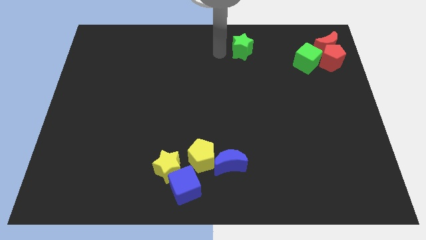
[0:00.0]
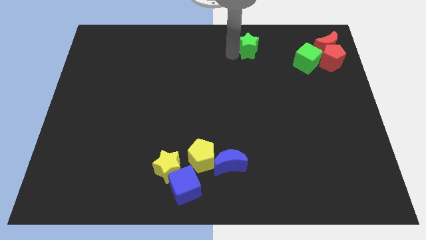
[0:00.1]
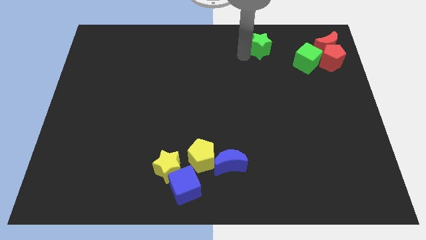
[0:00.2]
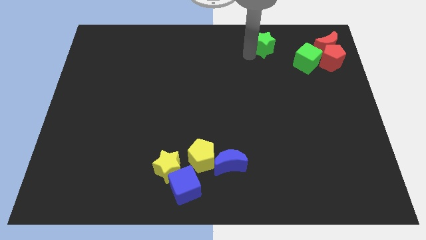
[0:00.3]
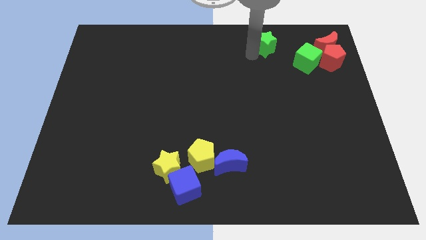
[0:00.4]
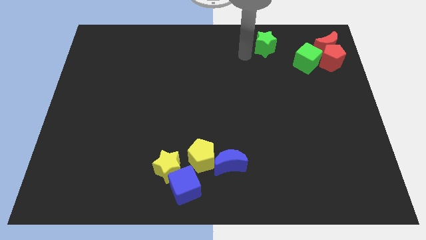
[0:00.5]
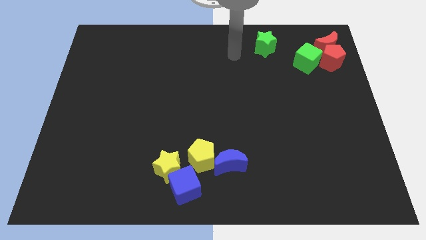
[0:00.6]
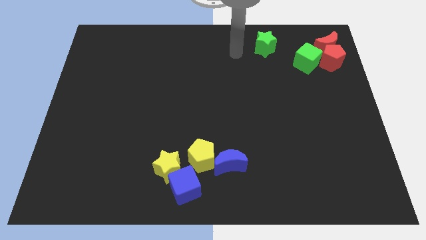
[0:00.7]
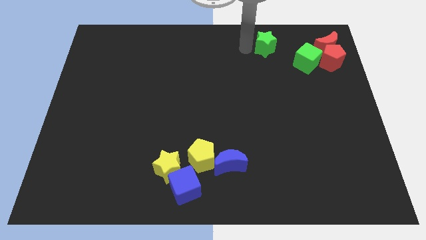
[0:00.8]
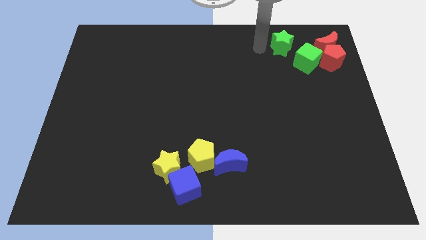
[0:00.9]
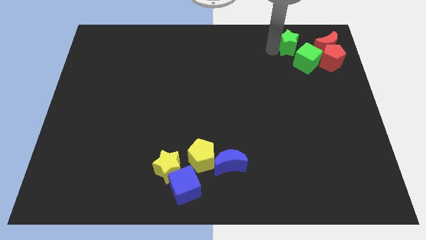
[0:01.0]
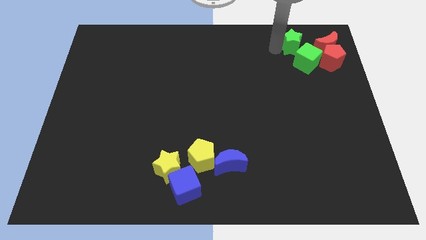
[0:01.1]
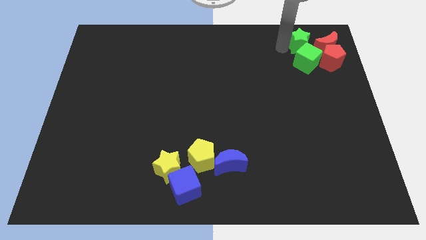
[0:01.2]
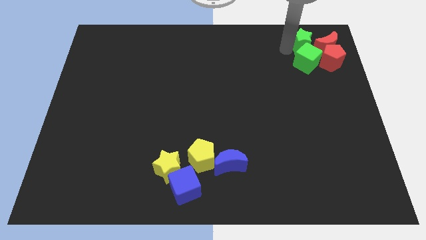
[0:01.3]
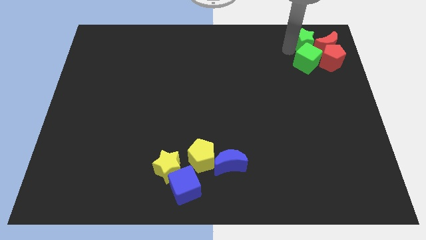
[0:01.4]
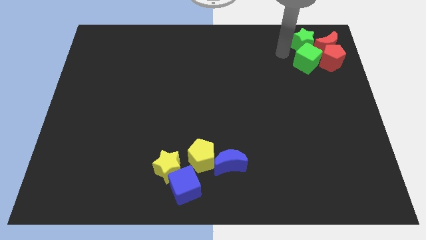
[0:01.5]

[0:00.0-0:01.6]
place the green star vertically above the green cube

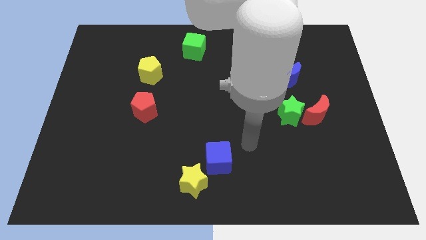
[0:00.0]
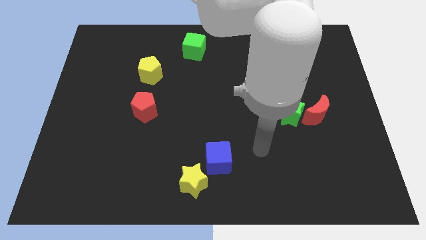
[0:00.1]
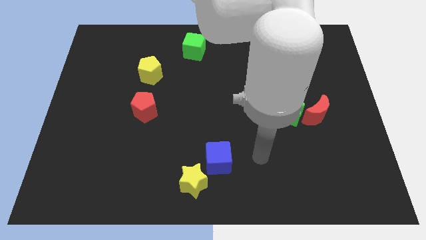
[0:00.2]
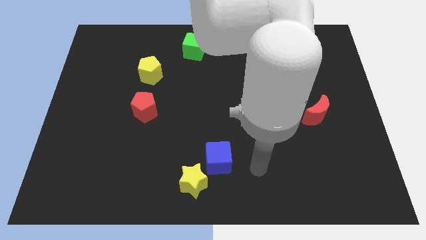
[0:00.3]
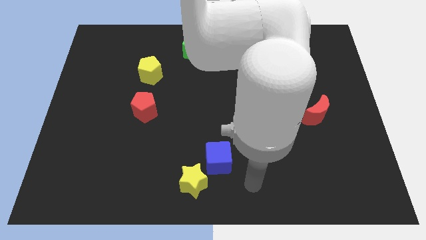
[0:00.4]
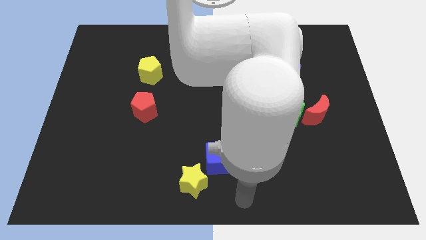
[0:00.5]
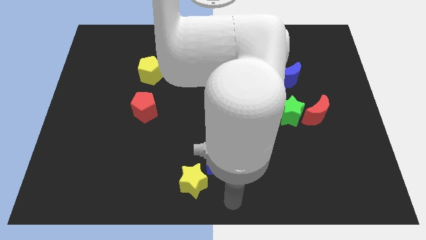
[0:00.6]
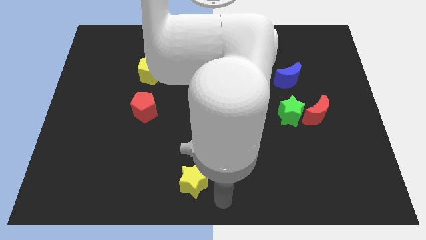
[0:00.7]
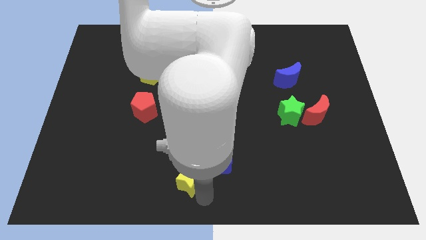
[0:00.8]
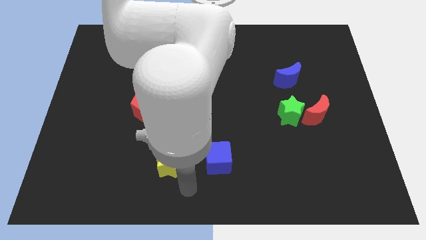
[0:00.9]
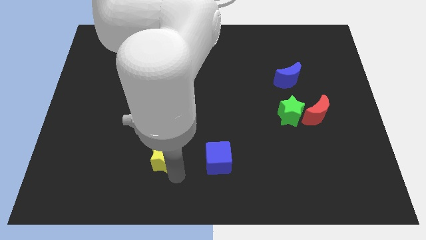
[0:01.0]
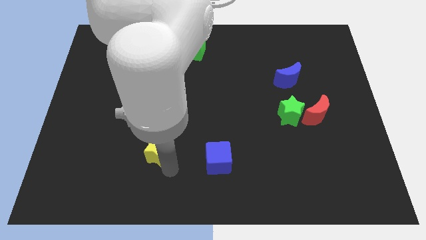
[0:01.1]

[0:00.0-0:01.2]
place the yellow star left to the blue cube

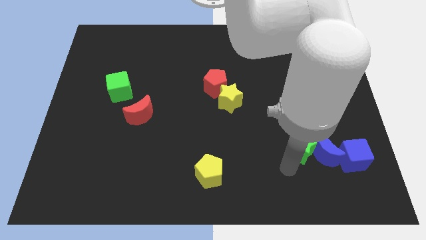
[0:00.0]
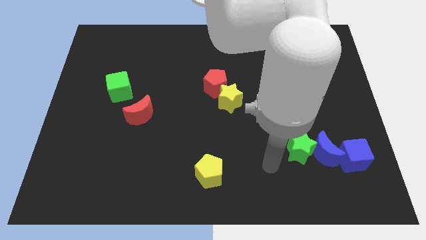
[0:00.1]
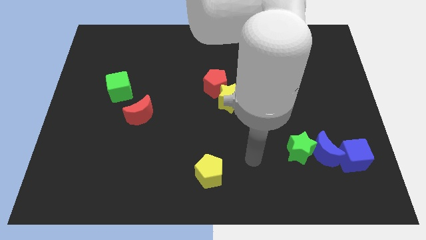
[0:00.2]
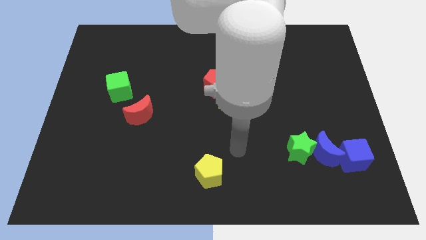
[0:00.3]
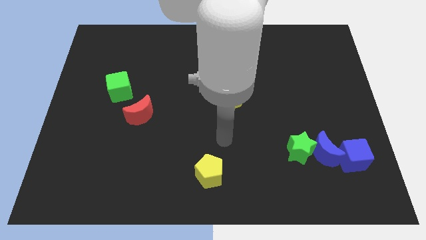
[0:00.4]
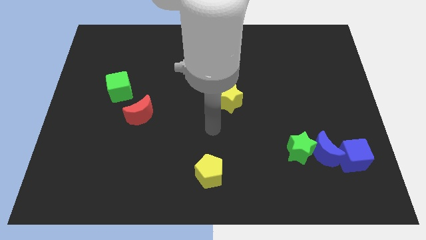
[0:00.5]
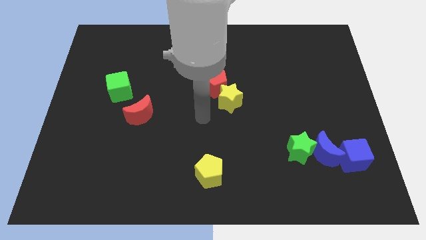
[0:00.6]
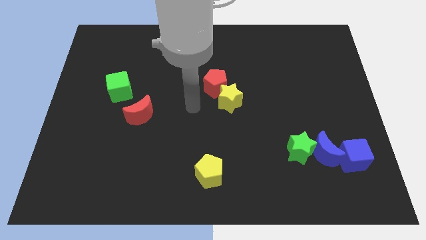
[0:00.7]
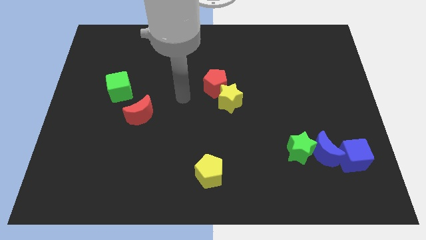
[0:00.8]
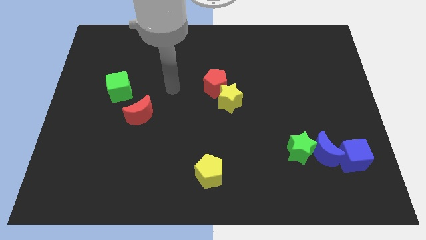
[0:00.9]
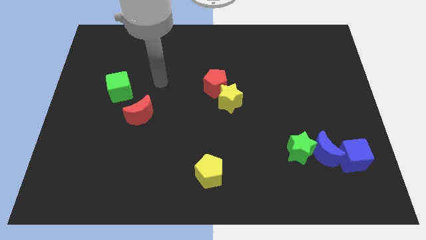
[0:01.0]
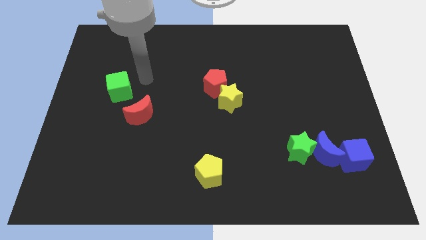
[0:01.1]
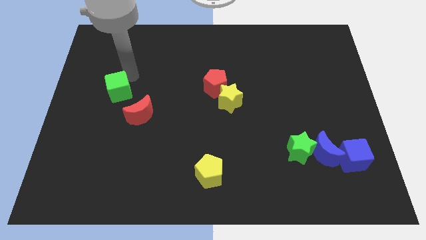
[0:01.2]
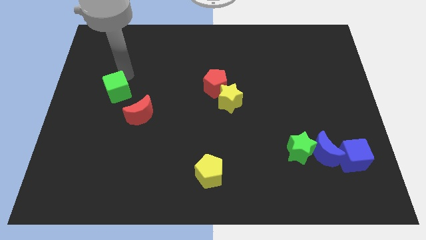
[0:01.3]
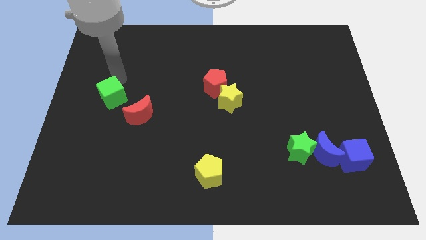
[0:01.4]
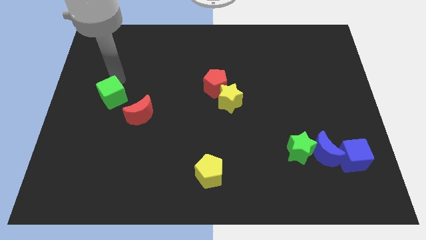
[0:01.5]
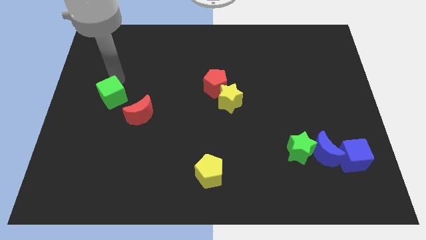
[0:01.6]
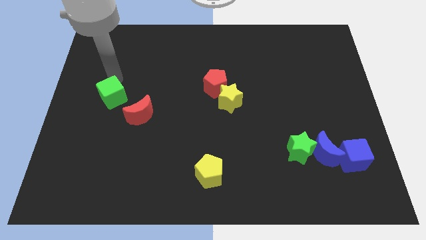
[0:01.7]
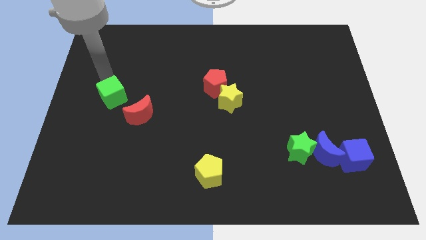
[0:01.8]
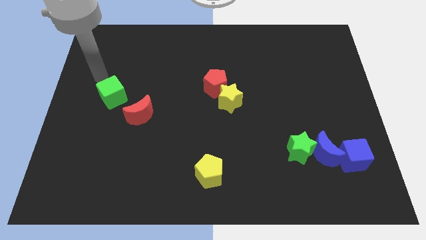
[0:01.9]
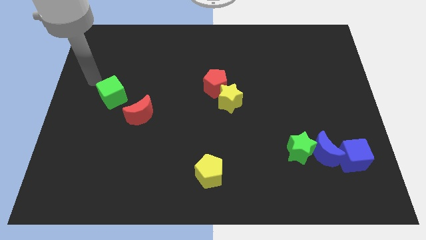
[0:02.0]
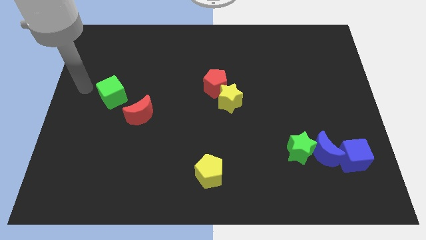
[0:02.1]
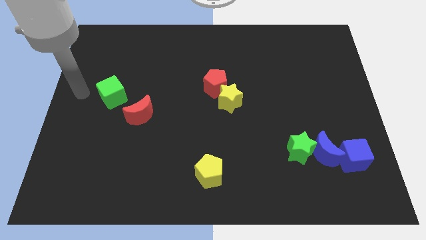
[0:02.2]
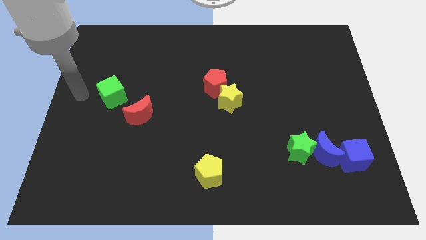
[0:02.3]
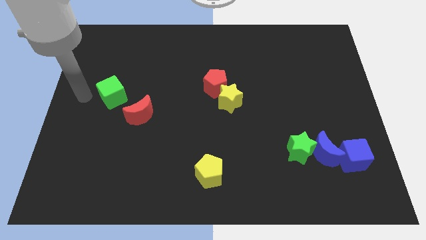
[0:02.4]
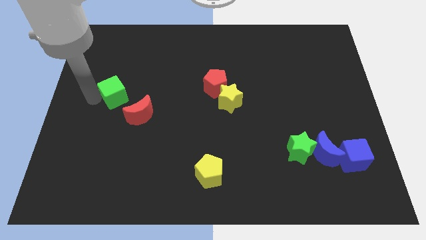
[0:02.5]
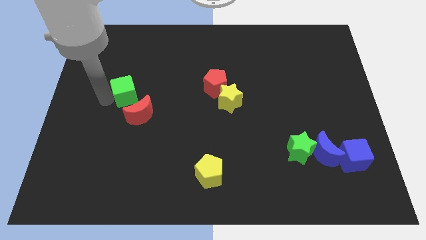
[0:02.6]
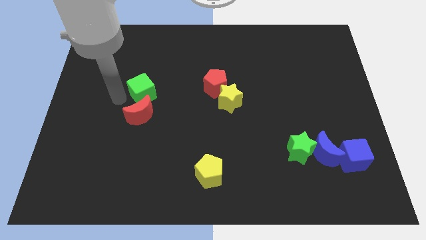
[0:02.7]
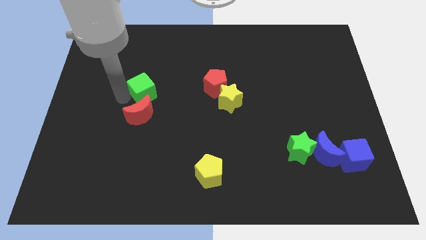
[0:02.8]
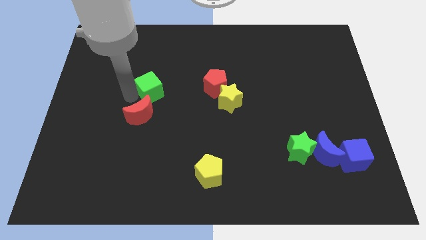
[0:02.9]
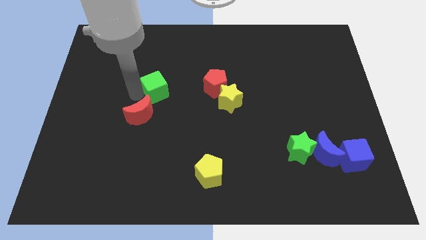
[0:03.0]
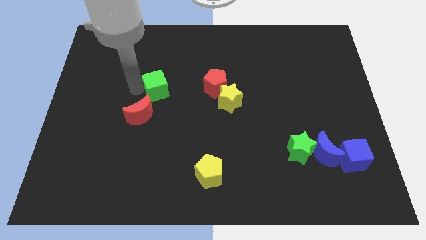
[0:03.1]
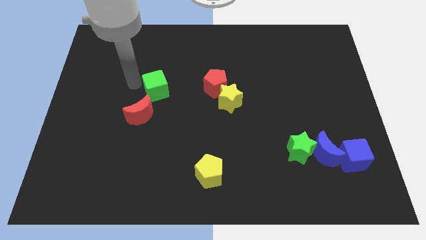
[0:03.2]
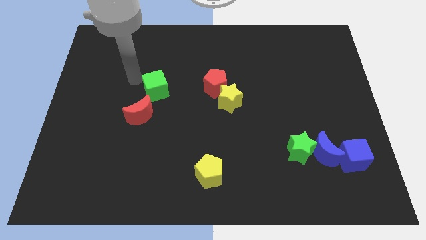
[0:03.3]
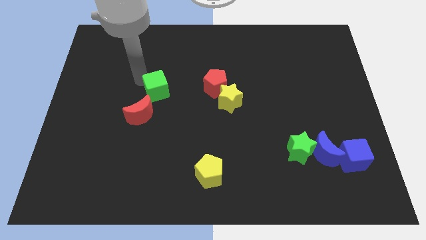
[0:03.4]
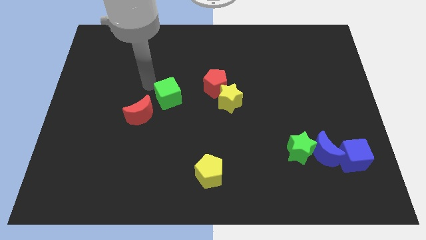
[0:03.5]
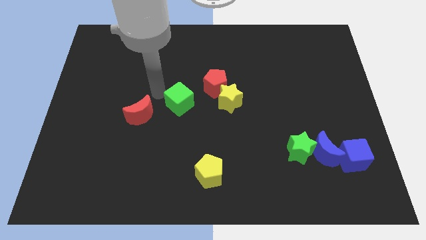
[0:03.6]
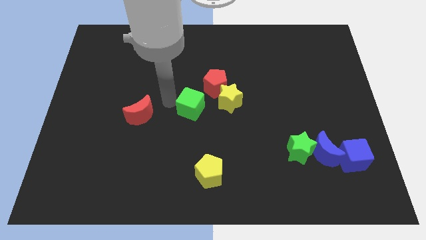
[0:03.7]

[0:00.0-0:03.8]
place the green cube in between the red pentagon and red moon

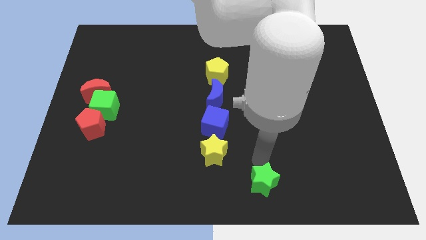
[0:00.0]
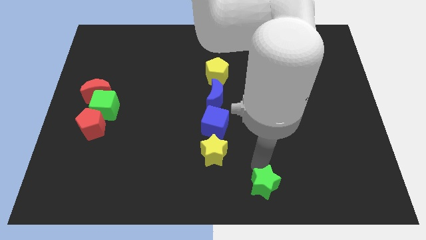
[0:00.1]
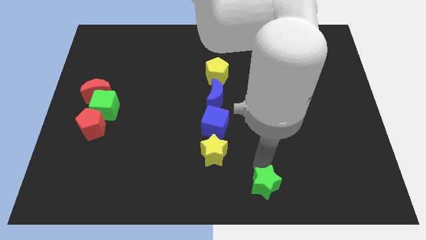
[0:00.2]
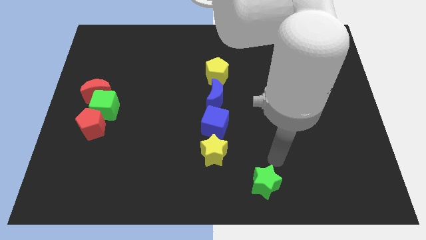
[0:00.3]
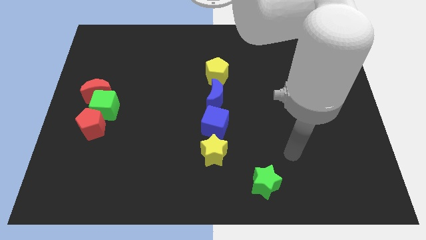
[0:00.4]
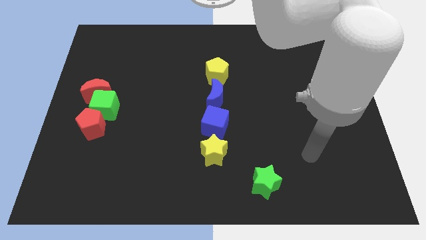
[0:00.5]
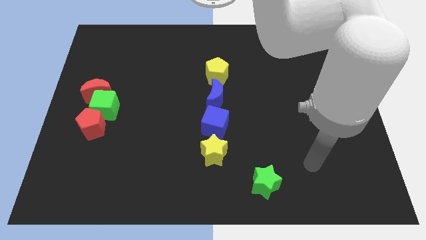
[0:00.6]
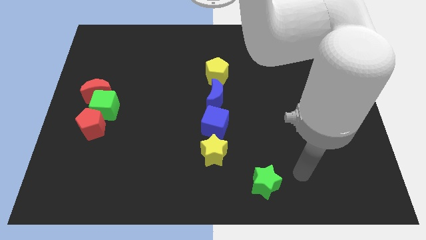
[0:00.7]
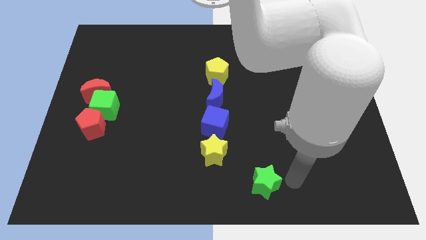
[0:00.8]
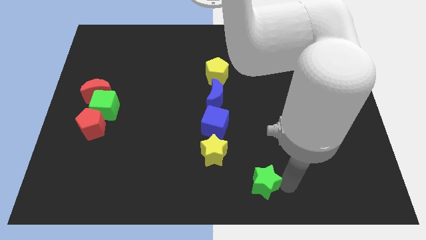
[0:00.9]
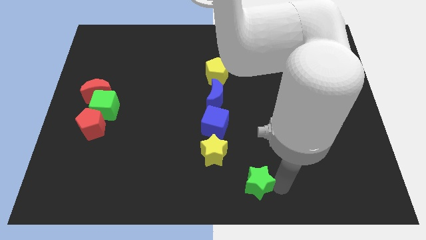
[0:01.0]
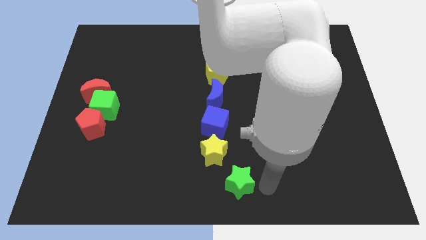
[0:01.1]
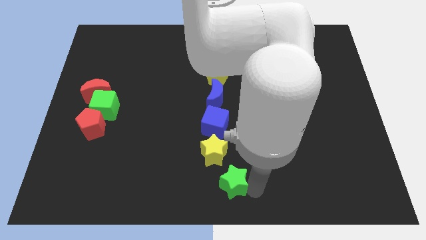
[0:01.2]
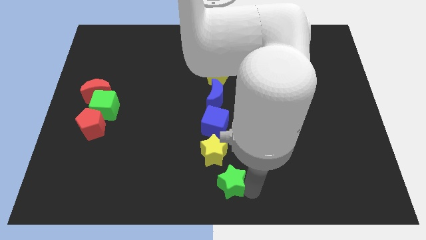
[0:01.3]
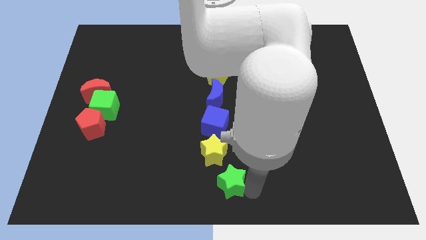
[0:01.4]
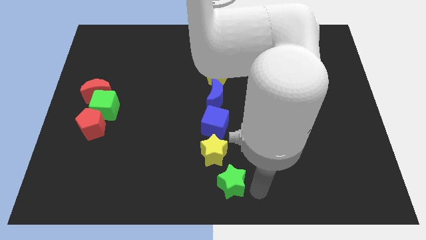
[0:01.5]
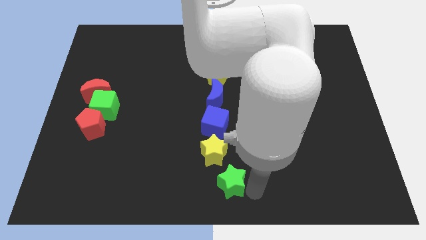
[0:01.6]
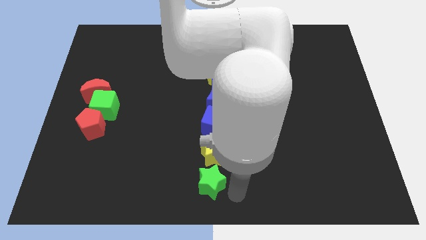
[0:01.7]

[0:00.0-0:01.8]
push the green star to the bottom of the yellow star

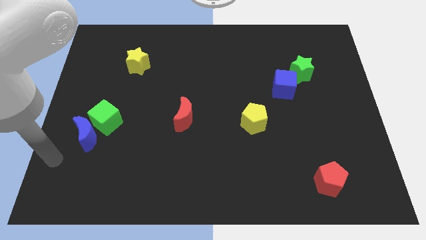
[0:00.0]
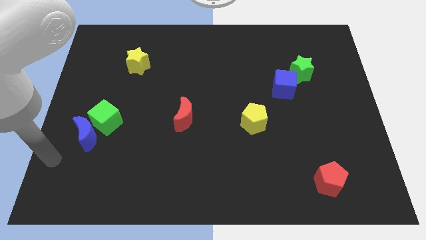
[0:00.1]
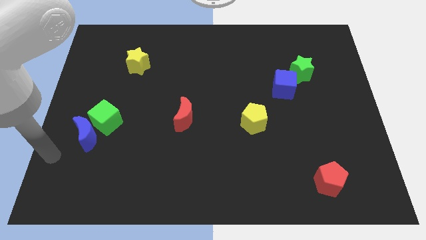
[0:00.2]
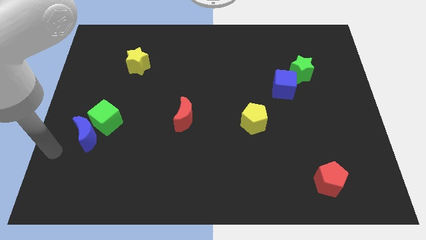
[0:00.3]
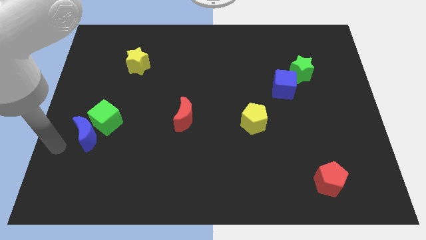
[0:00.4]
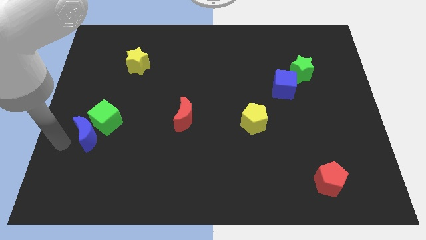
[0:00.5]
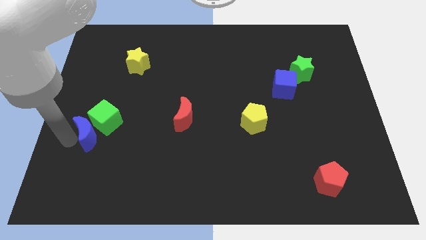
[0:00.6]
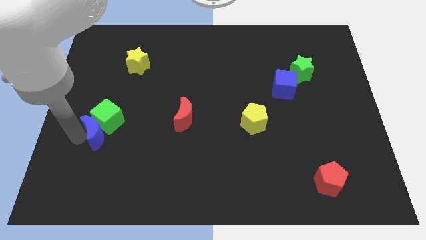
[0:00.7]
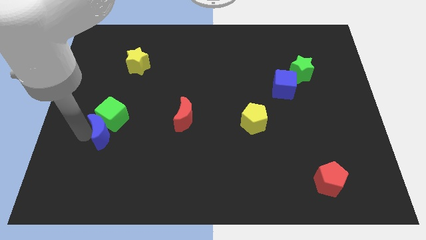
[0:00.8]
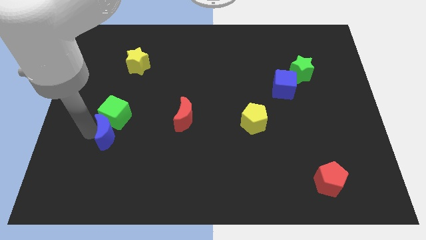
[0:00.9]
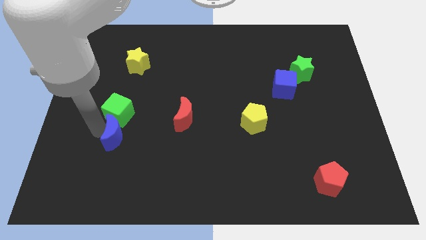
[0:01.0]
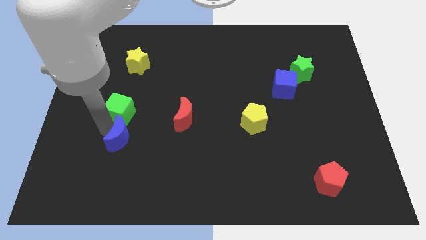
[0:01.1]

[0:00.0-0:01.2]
slightly push the green cube and blue moon towards the red moon
